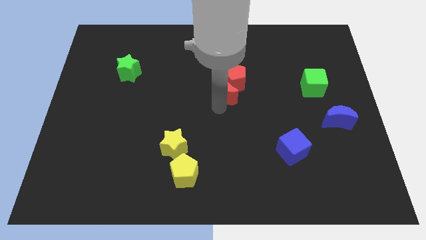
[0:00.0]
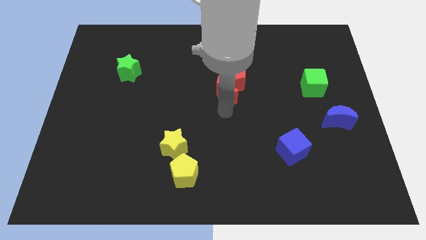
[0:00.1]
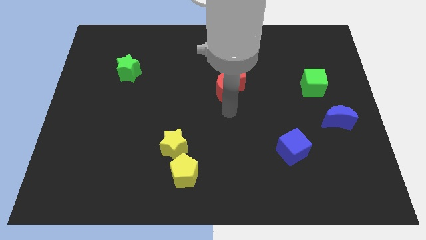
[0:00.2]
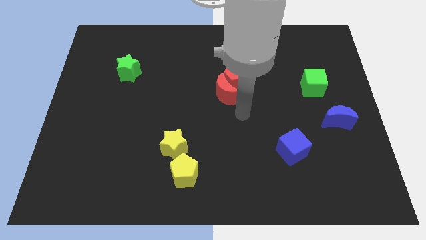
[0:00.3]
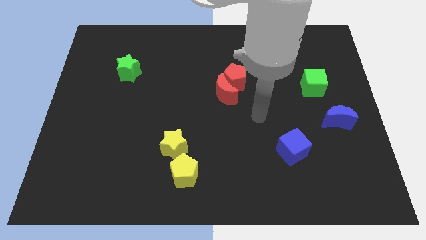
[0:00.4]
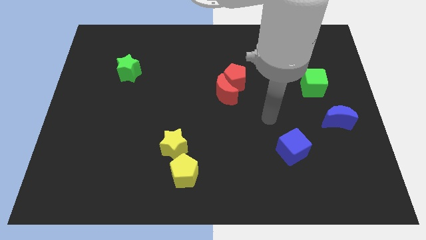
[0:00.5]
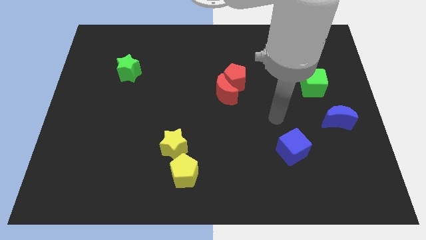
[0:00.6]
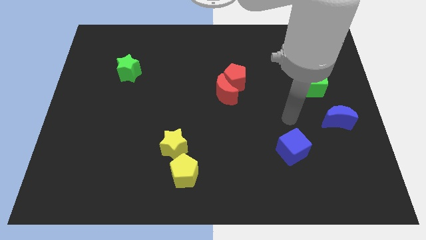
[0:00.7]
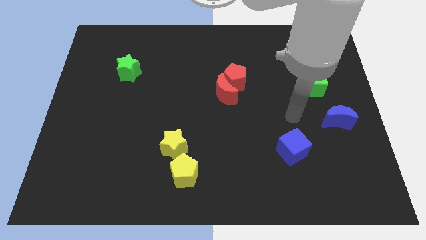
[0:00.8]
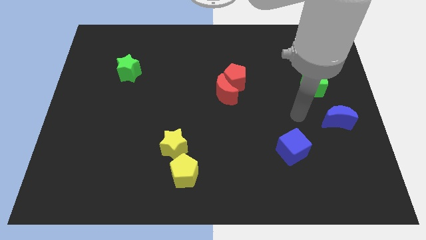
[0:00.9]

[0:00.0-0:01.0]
place your hand at the top side of the blue cube

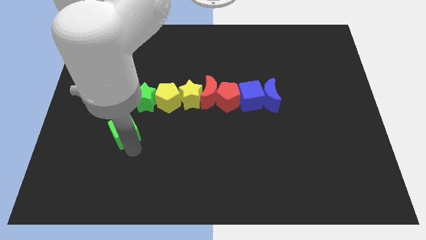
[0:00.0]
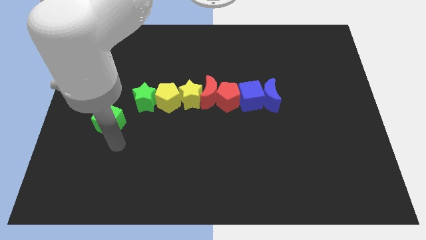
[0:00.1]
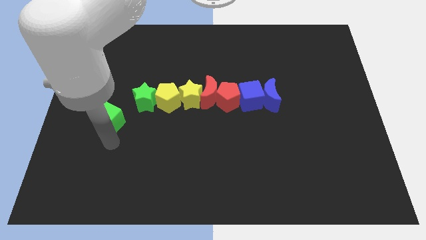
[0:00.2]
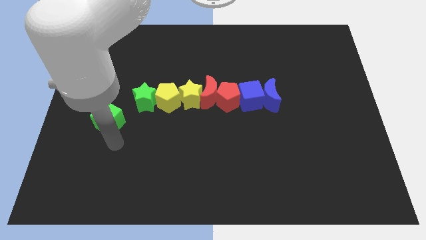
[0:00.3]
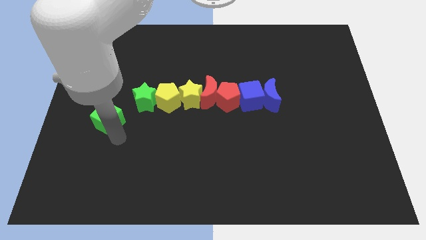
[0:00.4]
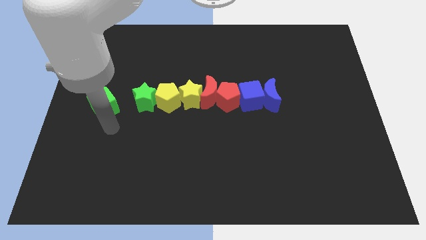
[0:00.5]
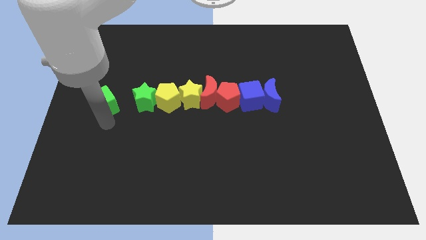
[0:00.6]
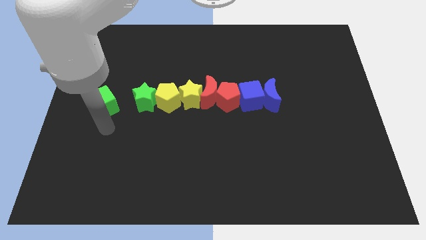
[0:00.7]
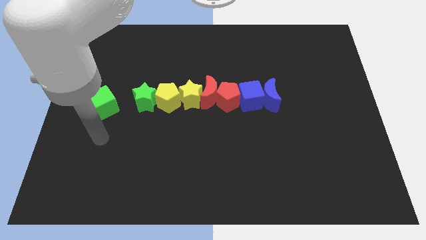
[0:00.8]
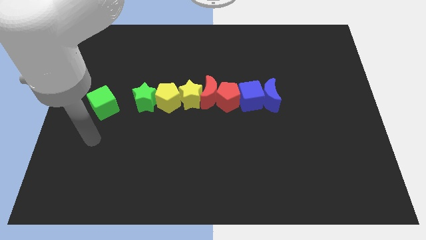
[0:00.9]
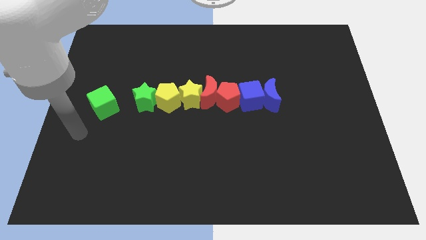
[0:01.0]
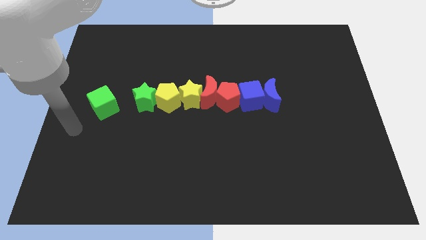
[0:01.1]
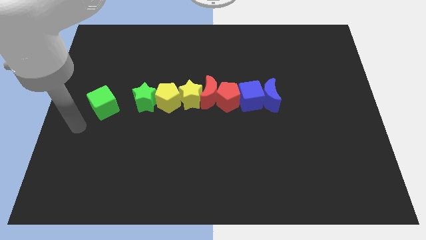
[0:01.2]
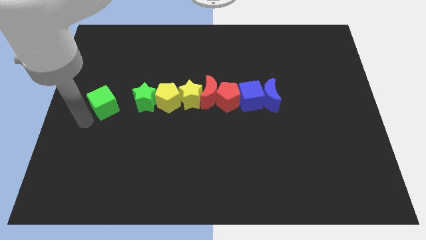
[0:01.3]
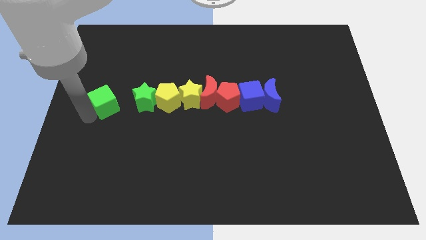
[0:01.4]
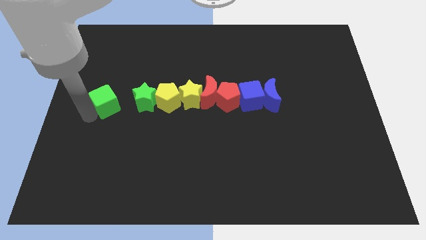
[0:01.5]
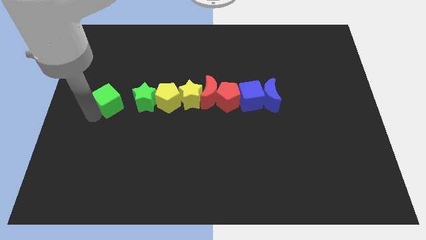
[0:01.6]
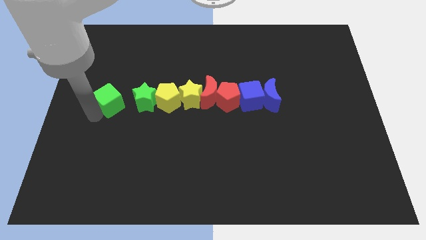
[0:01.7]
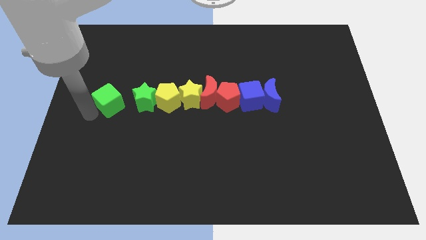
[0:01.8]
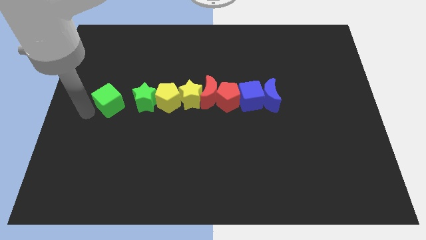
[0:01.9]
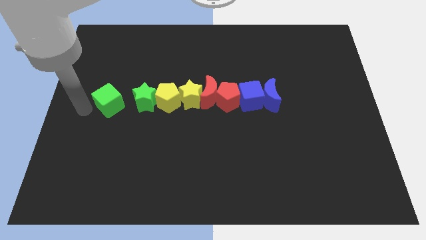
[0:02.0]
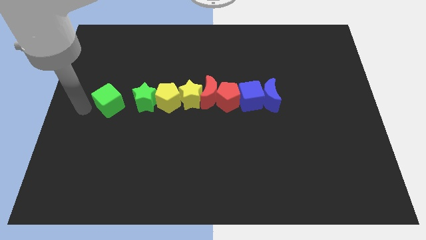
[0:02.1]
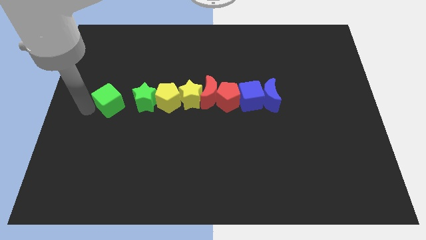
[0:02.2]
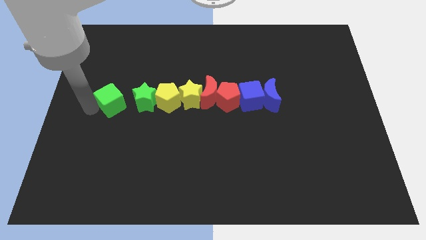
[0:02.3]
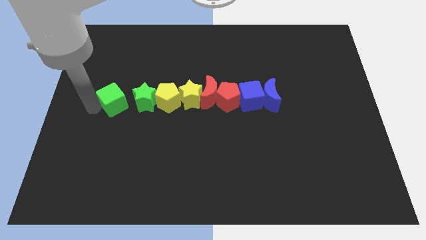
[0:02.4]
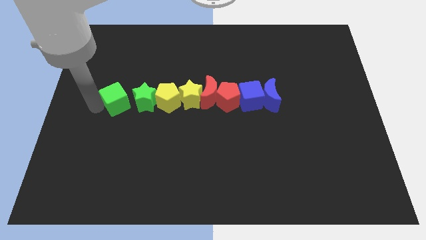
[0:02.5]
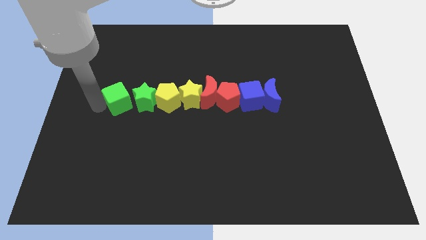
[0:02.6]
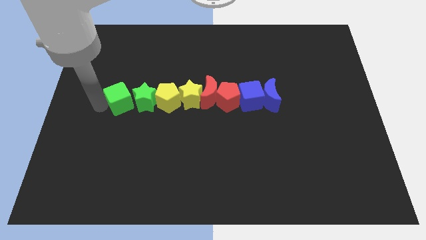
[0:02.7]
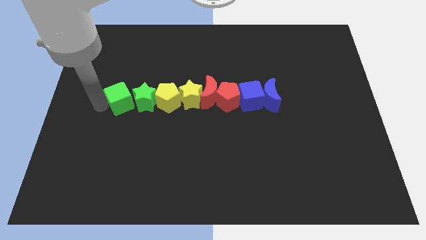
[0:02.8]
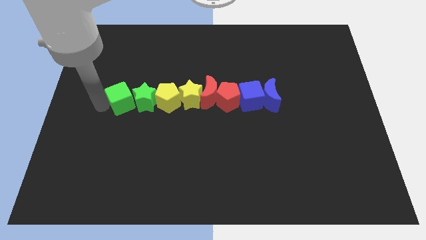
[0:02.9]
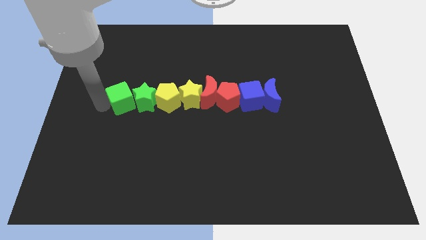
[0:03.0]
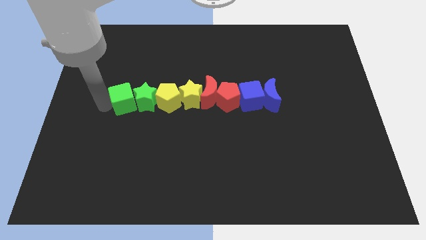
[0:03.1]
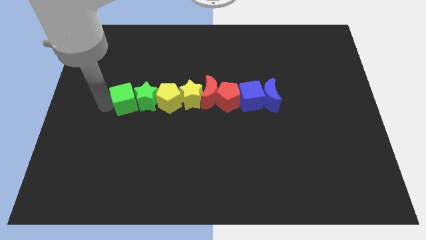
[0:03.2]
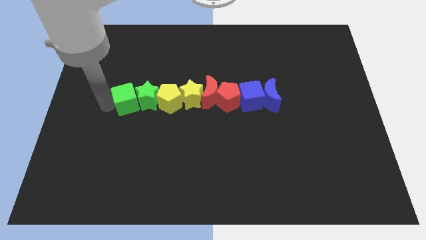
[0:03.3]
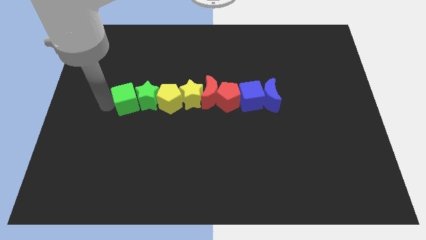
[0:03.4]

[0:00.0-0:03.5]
move the green cube left to the green star

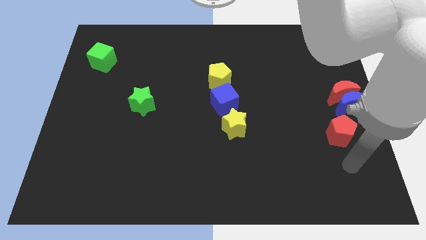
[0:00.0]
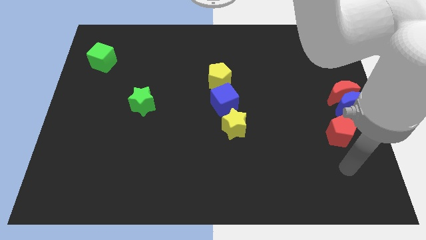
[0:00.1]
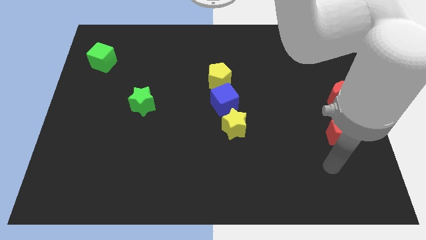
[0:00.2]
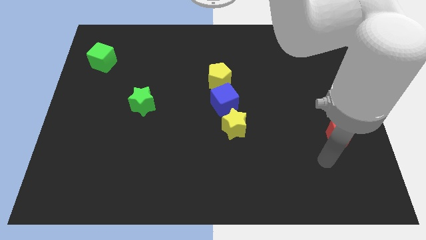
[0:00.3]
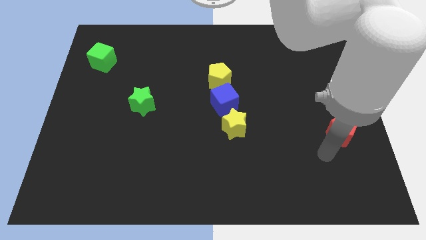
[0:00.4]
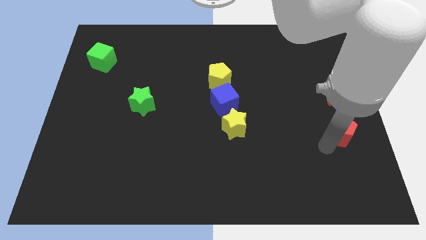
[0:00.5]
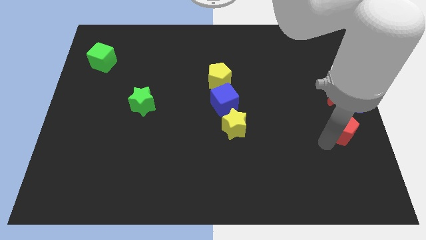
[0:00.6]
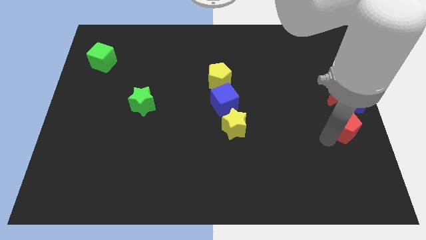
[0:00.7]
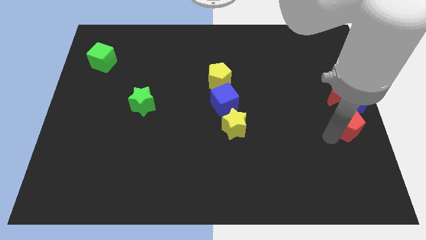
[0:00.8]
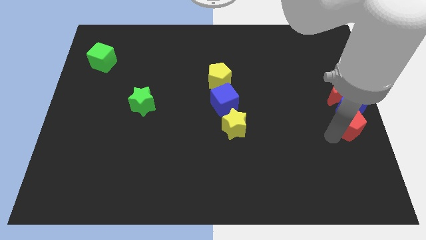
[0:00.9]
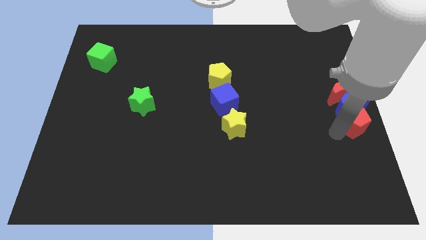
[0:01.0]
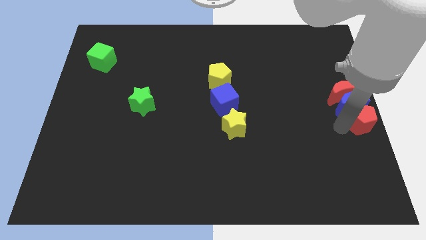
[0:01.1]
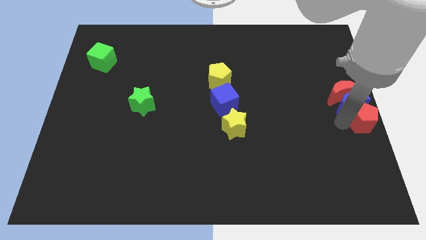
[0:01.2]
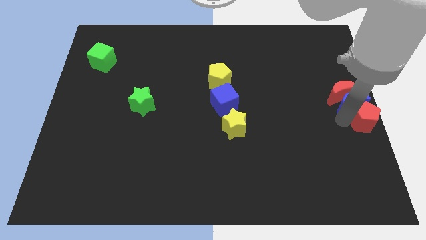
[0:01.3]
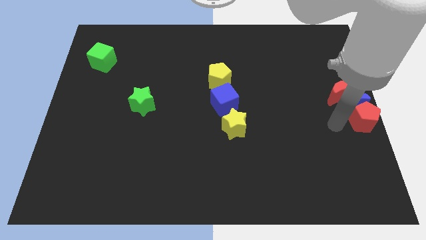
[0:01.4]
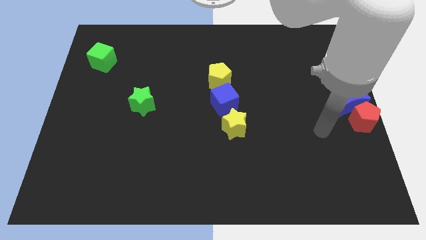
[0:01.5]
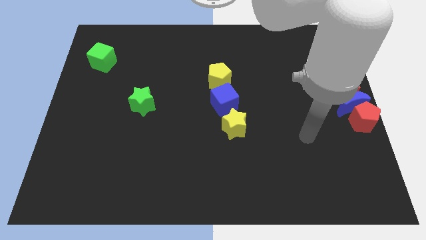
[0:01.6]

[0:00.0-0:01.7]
place the red pentagon at the bottom of blue moon

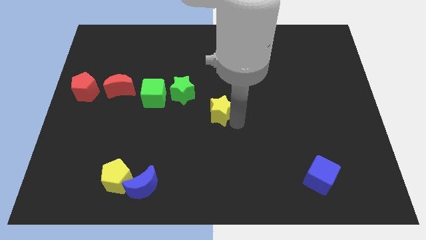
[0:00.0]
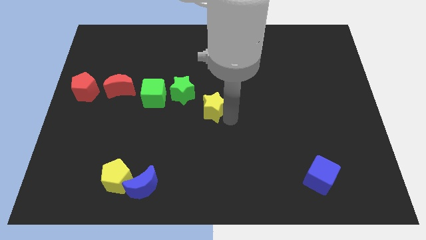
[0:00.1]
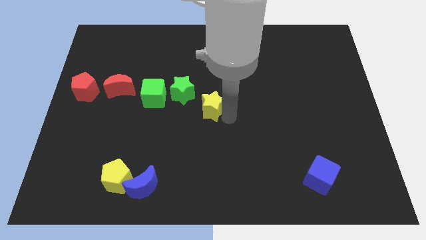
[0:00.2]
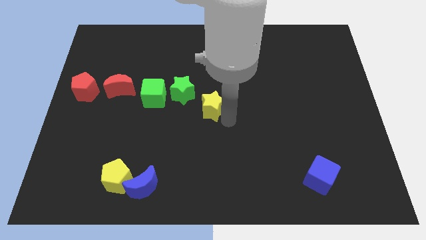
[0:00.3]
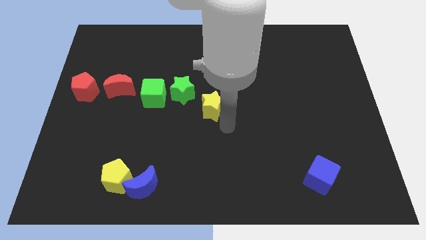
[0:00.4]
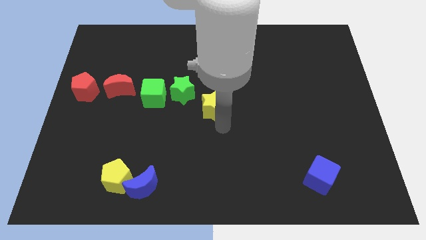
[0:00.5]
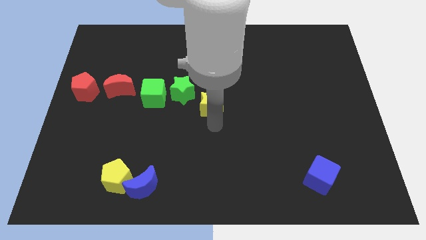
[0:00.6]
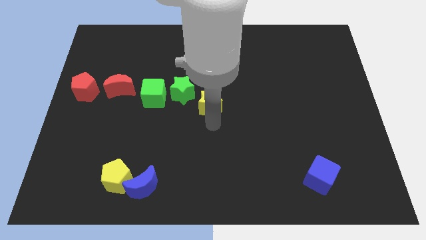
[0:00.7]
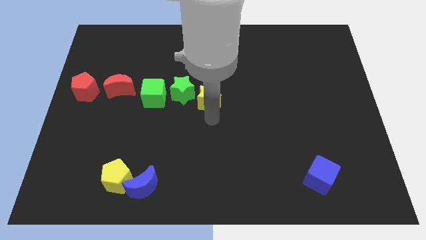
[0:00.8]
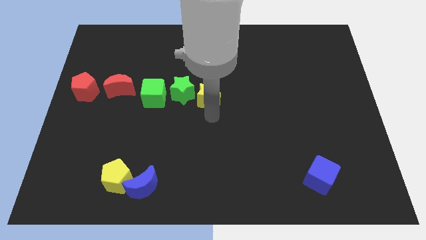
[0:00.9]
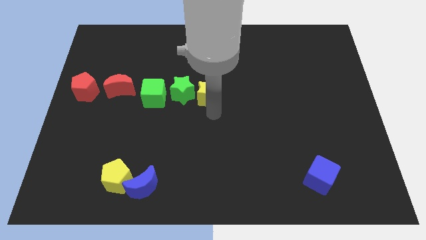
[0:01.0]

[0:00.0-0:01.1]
move the yellow star to the right of the green star

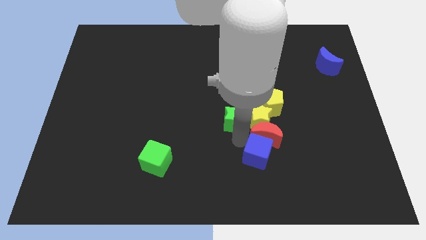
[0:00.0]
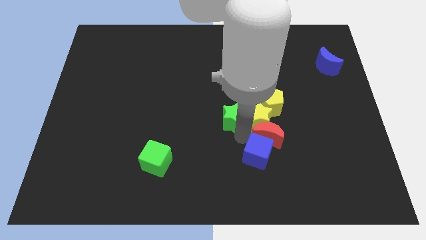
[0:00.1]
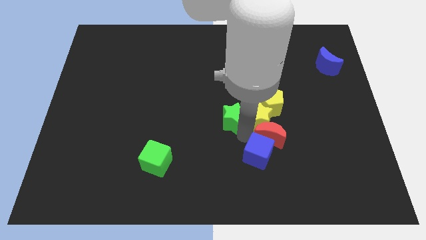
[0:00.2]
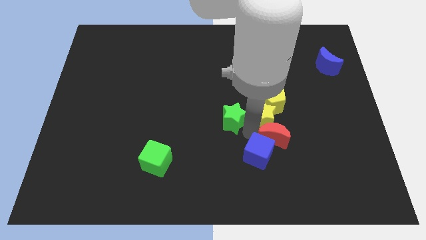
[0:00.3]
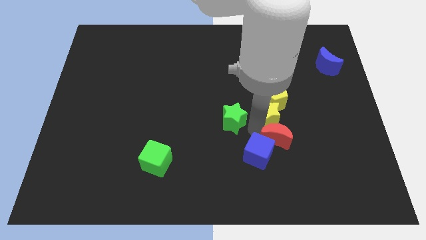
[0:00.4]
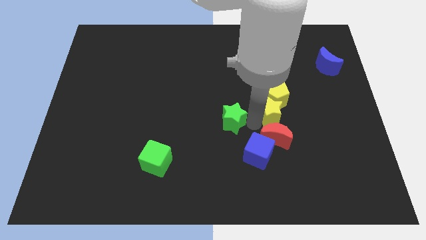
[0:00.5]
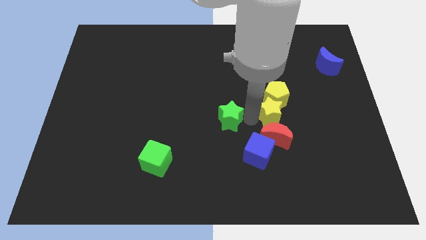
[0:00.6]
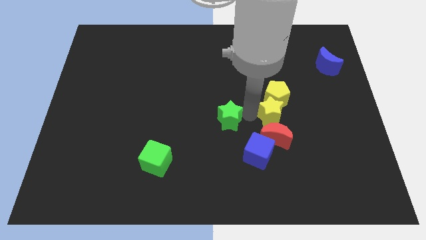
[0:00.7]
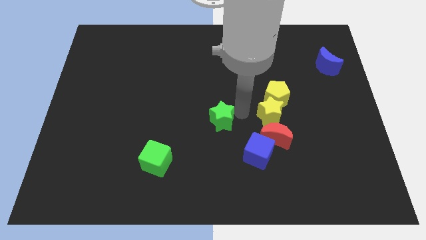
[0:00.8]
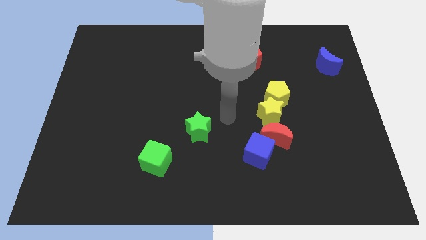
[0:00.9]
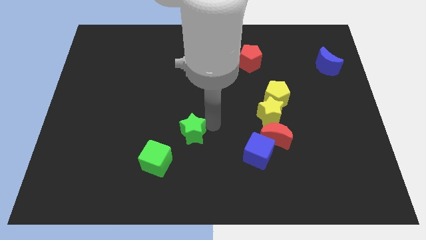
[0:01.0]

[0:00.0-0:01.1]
separate the green and yellow star

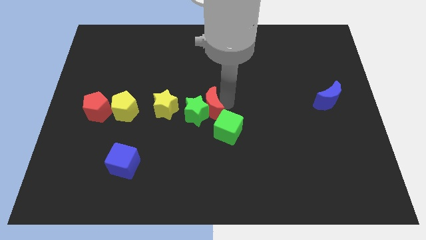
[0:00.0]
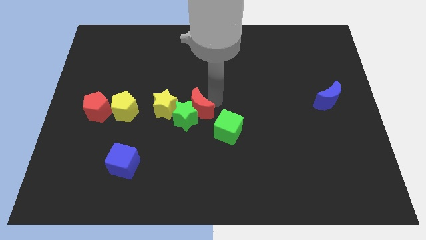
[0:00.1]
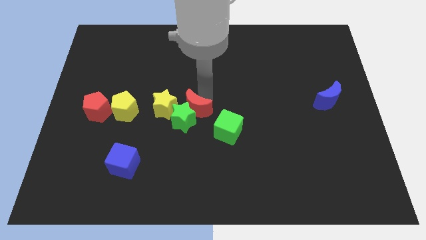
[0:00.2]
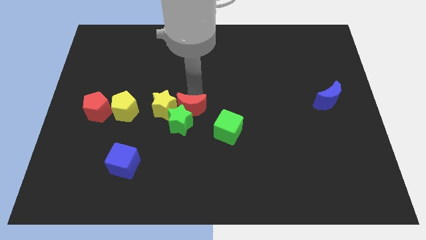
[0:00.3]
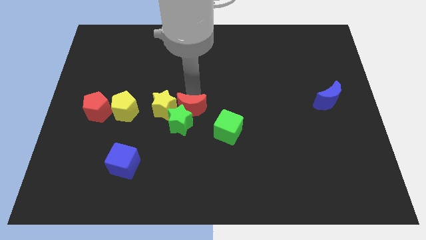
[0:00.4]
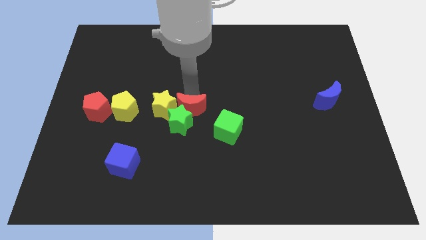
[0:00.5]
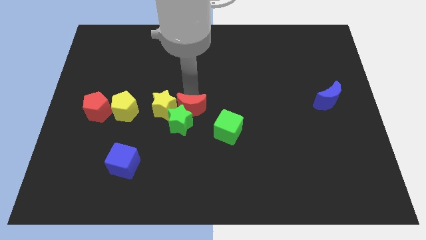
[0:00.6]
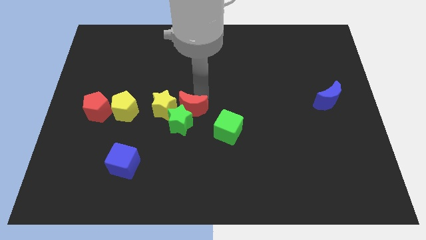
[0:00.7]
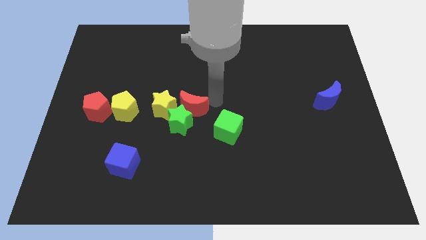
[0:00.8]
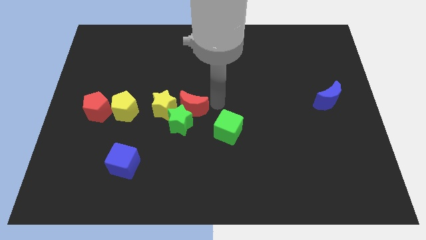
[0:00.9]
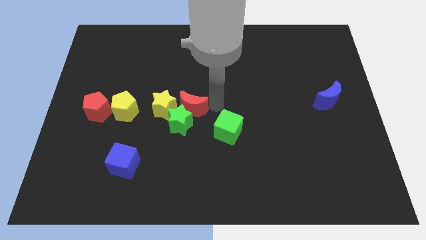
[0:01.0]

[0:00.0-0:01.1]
push the green star with red moon slightly to down
